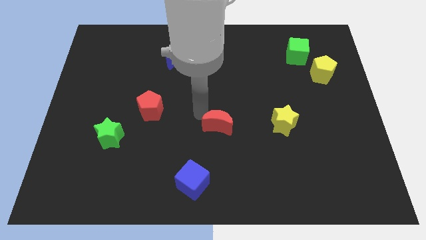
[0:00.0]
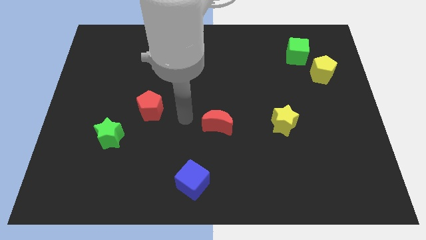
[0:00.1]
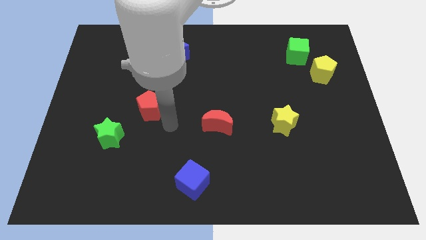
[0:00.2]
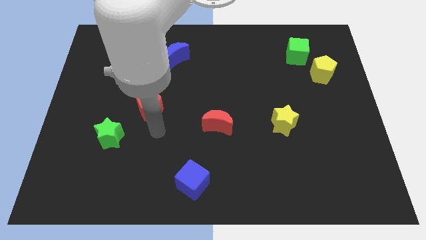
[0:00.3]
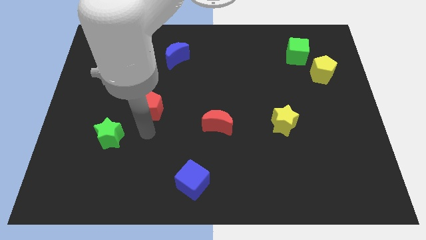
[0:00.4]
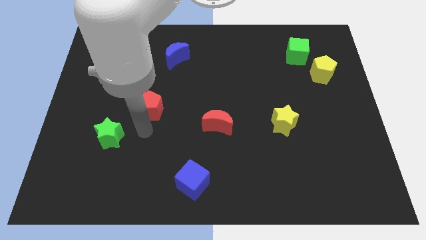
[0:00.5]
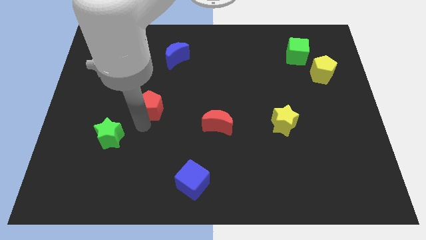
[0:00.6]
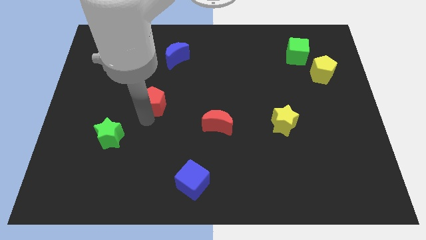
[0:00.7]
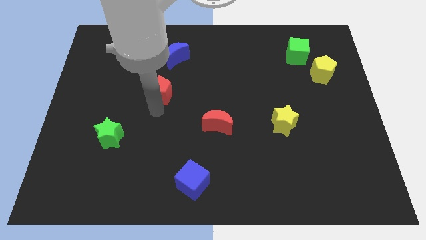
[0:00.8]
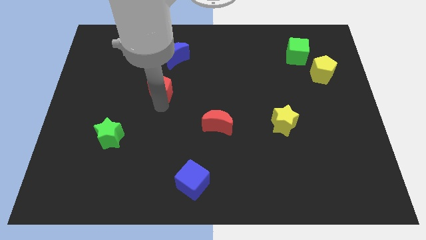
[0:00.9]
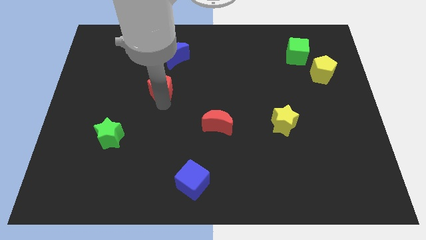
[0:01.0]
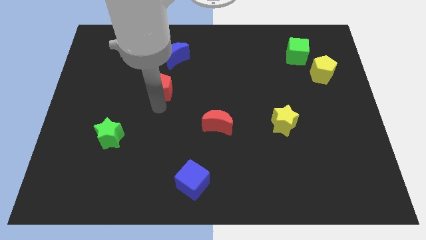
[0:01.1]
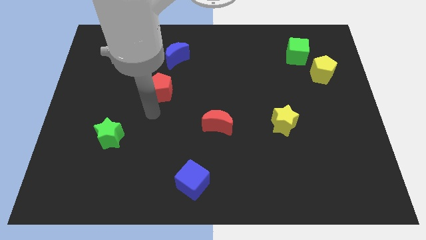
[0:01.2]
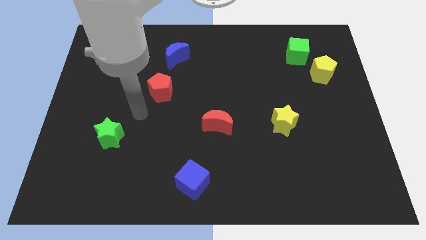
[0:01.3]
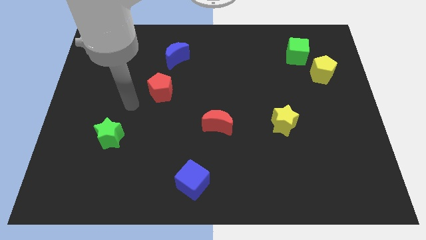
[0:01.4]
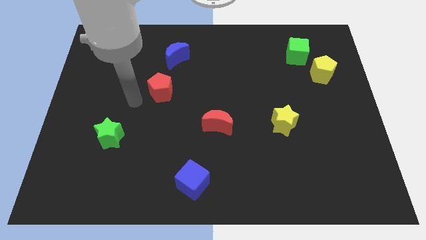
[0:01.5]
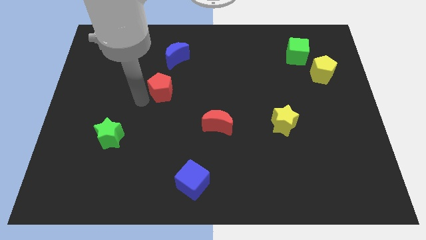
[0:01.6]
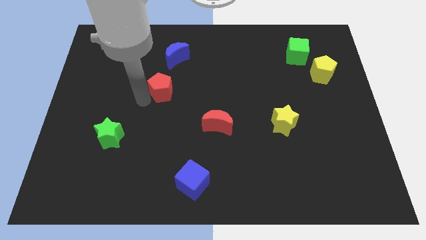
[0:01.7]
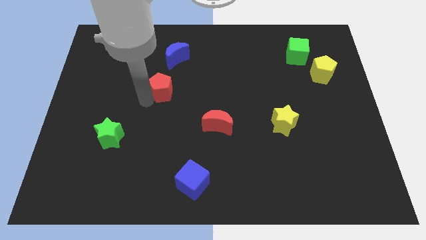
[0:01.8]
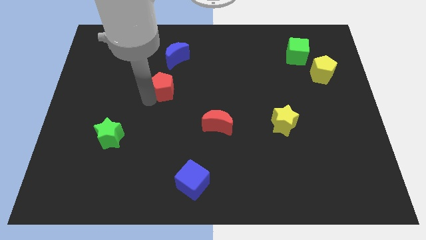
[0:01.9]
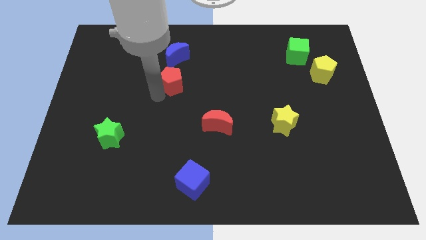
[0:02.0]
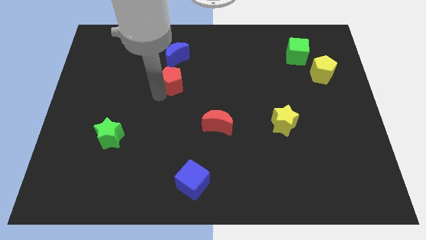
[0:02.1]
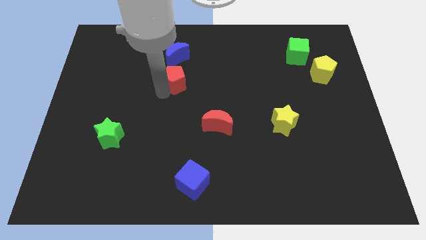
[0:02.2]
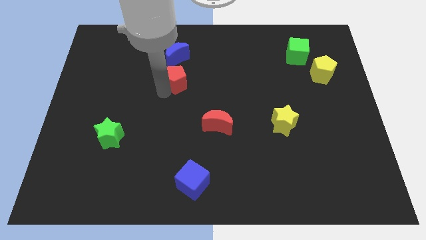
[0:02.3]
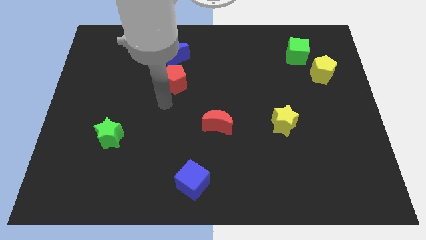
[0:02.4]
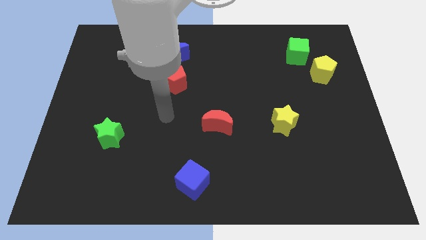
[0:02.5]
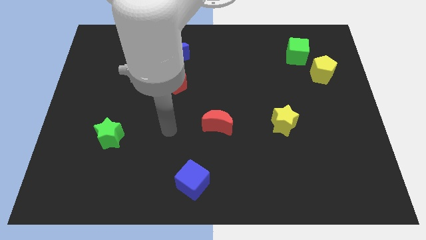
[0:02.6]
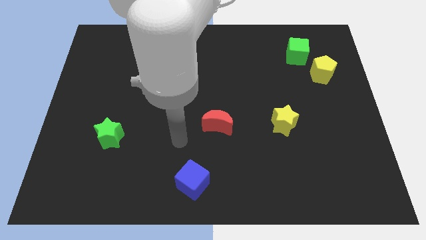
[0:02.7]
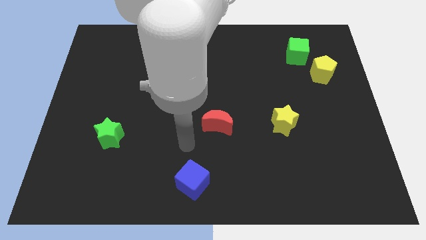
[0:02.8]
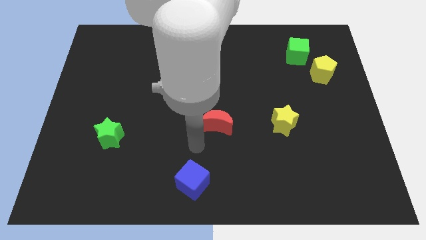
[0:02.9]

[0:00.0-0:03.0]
place the red pentagon below the blue crescent

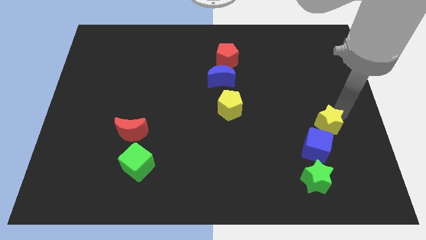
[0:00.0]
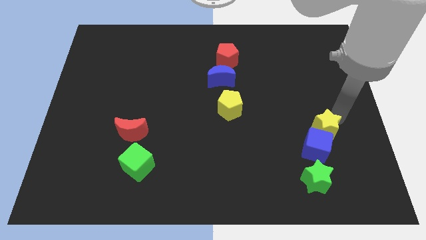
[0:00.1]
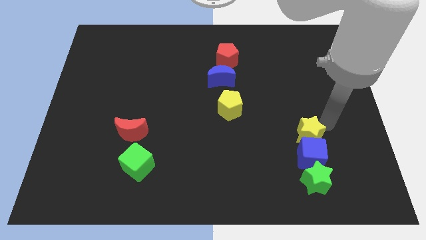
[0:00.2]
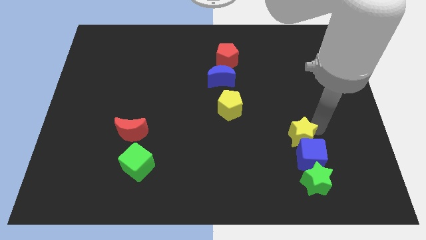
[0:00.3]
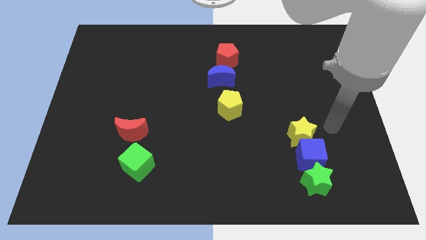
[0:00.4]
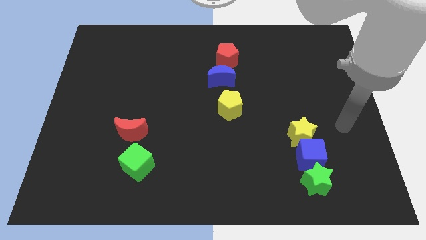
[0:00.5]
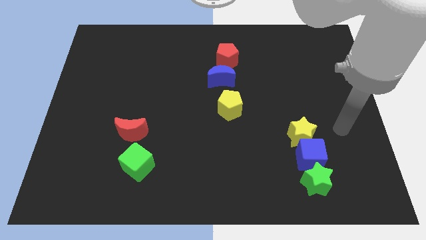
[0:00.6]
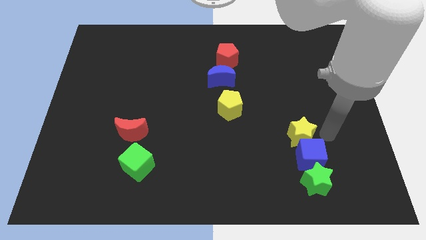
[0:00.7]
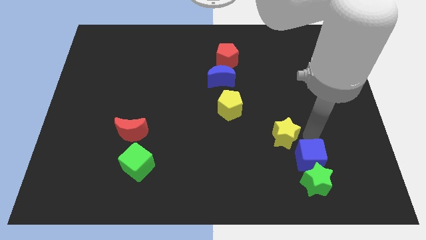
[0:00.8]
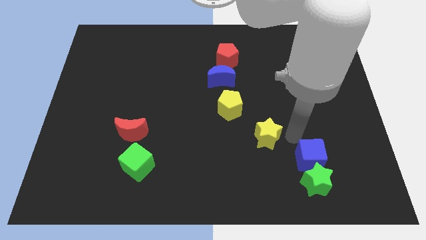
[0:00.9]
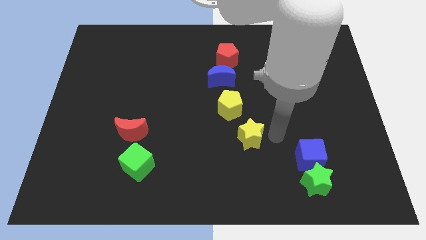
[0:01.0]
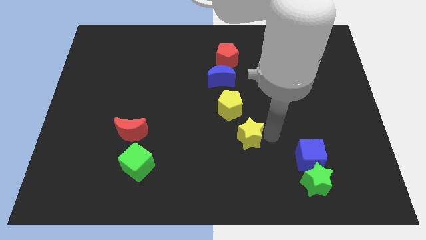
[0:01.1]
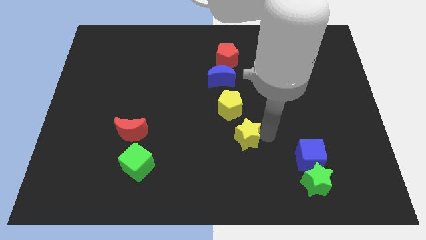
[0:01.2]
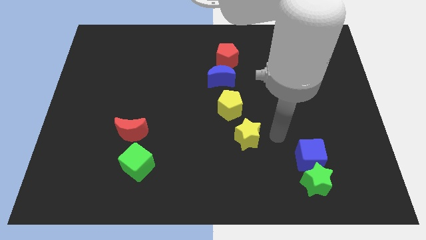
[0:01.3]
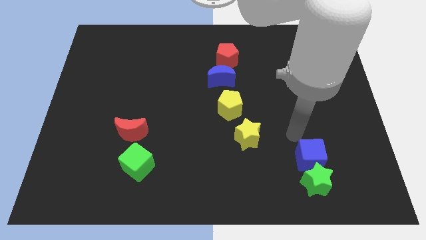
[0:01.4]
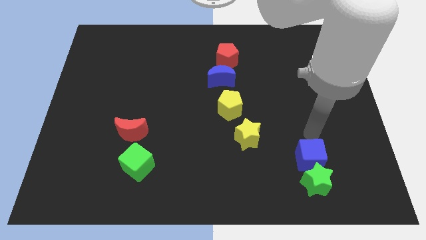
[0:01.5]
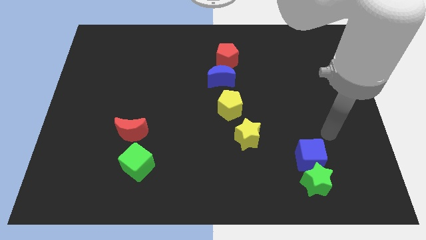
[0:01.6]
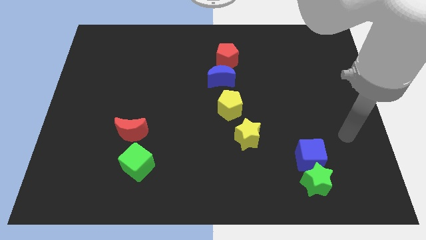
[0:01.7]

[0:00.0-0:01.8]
push the yellow star to the bottom right of the yellow pentagon

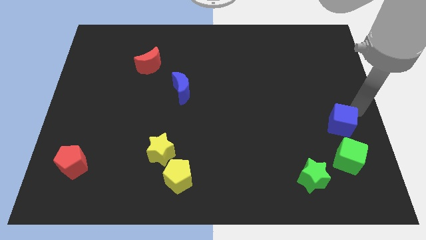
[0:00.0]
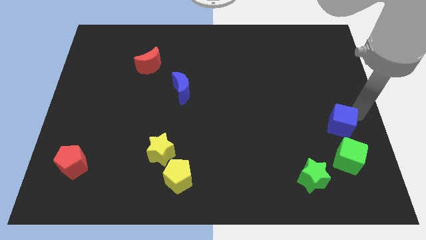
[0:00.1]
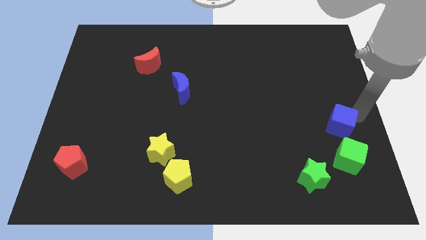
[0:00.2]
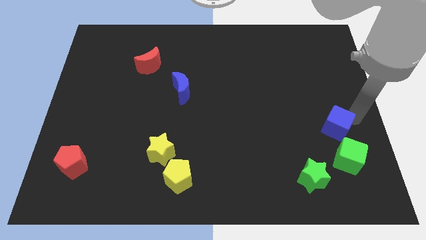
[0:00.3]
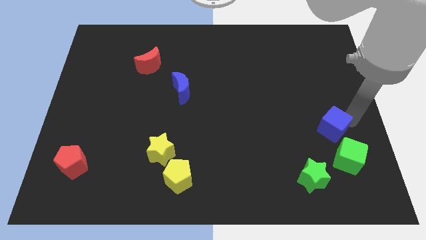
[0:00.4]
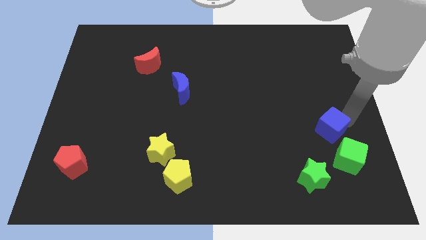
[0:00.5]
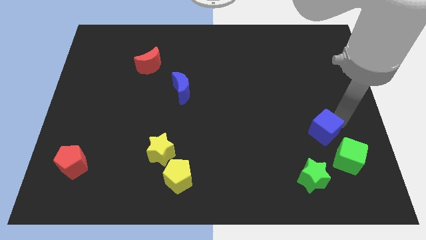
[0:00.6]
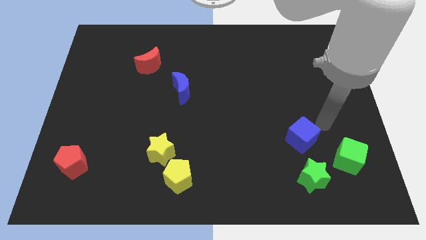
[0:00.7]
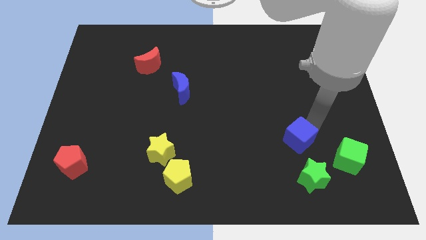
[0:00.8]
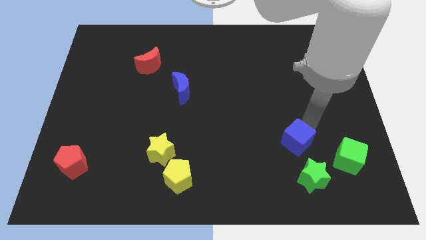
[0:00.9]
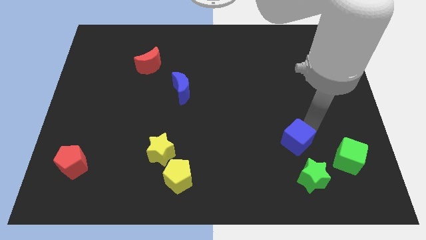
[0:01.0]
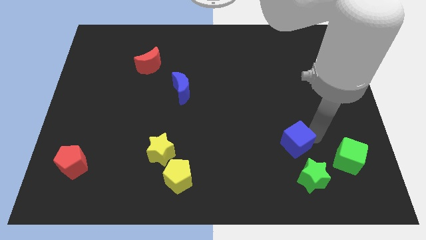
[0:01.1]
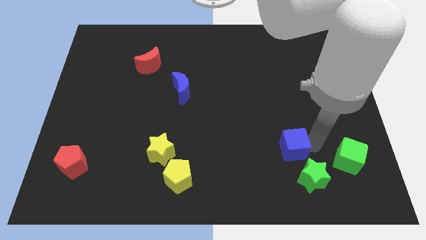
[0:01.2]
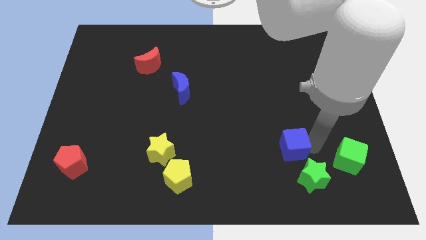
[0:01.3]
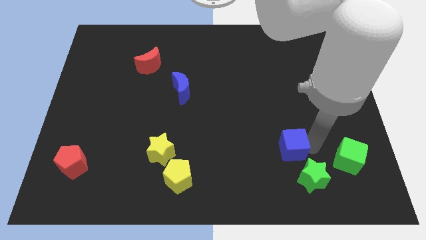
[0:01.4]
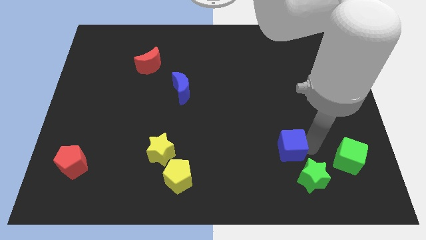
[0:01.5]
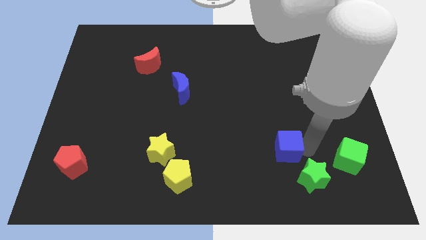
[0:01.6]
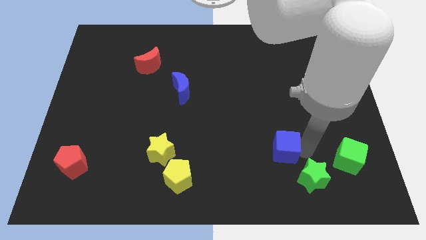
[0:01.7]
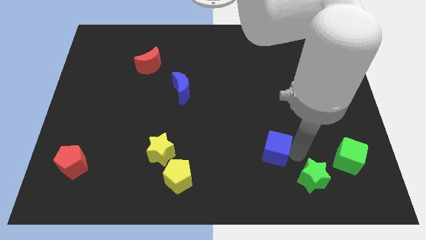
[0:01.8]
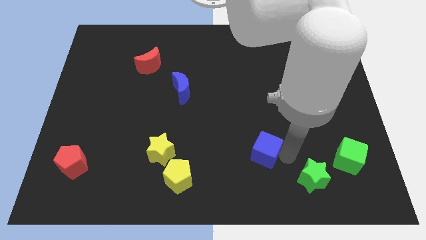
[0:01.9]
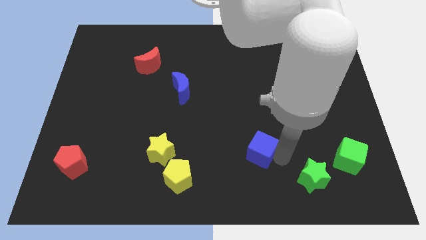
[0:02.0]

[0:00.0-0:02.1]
move blue cube horizontally to the left side of the green cube

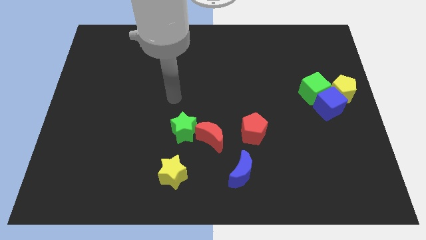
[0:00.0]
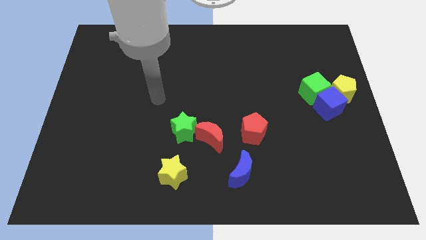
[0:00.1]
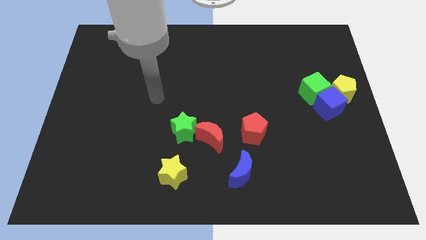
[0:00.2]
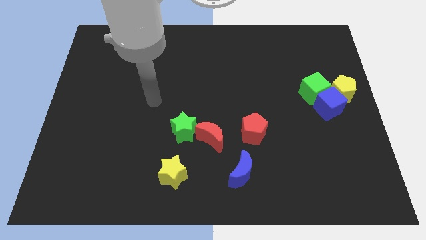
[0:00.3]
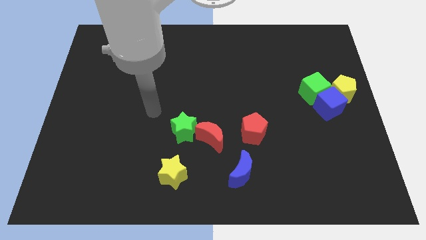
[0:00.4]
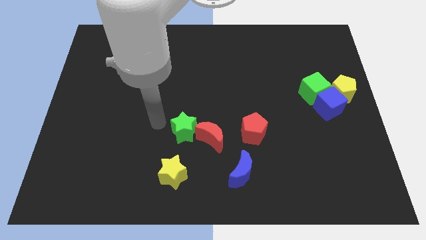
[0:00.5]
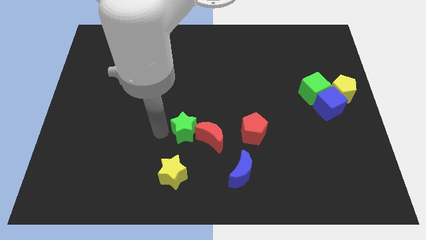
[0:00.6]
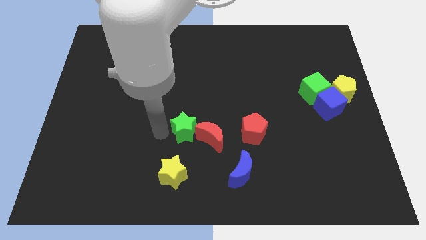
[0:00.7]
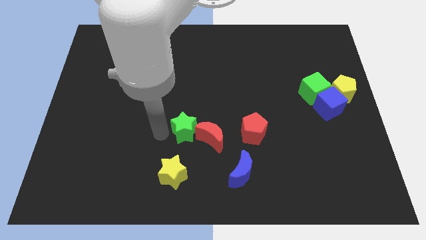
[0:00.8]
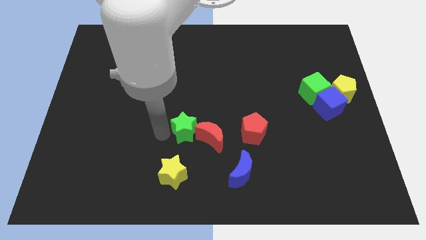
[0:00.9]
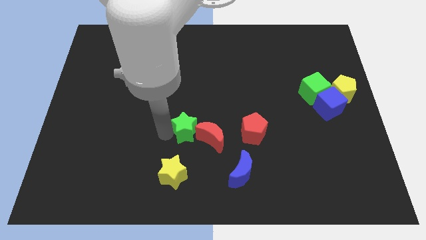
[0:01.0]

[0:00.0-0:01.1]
touch the left side of the green star

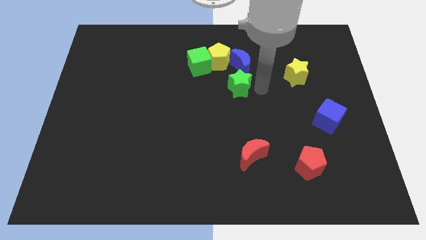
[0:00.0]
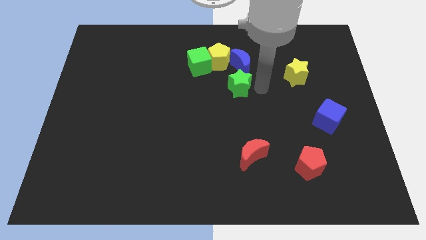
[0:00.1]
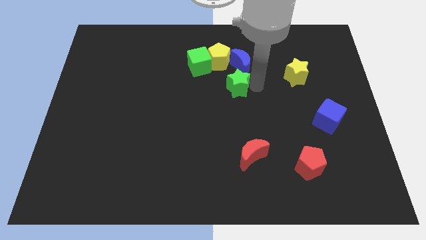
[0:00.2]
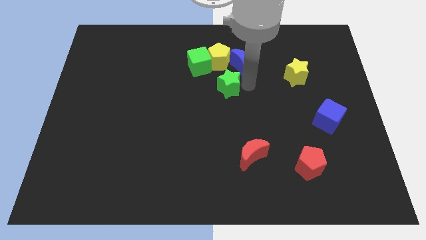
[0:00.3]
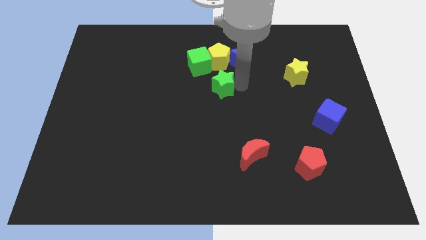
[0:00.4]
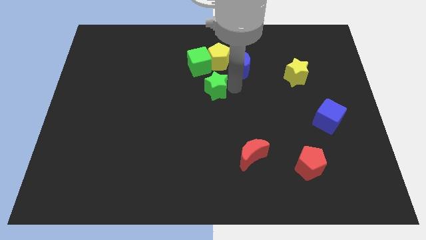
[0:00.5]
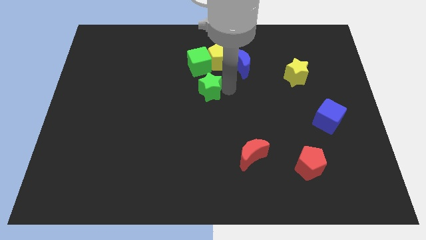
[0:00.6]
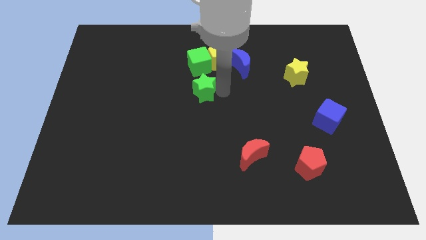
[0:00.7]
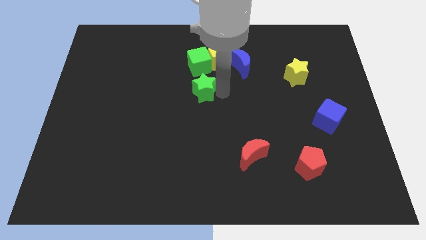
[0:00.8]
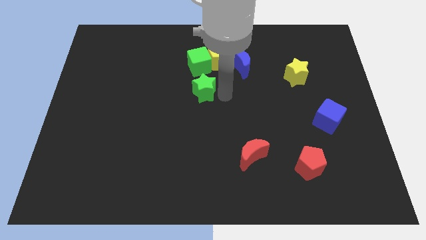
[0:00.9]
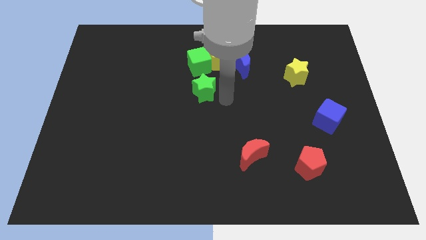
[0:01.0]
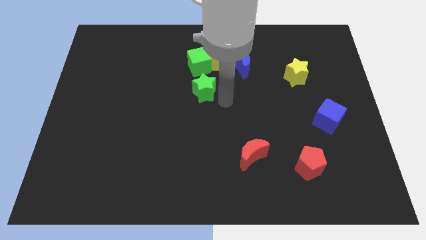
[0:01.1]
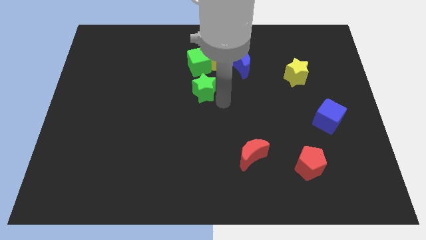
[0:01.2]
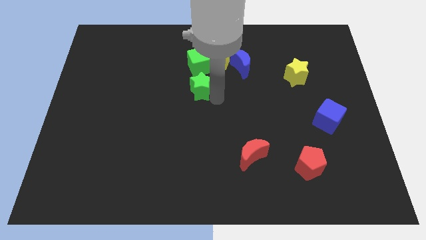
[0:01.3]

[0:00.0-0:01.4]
push the green star to the bottom of the green cube
